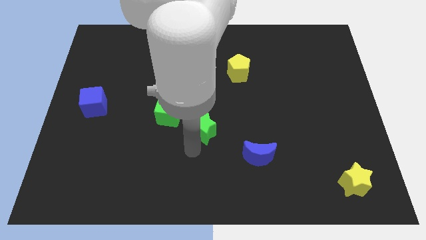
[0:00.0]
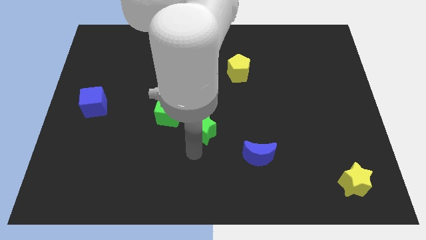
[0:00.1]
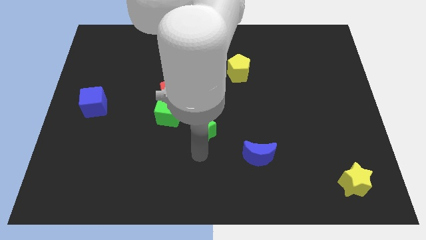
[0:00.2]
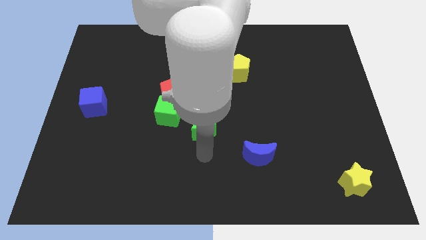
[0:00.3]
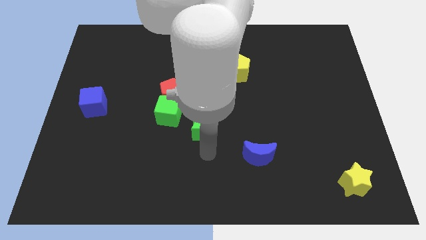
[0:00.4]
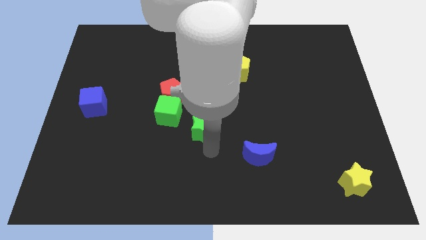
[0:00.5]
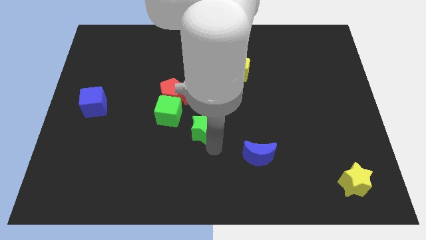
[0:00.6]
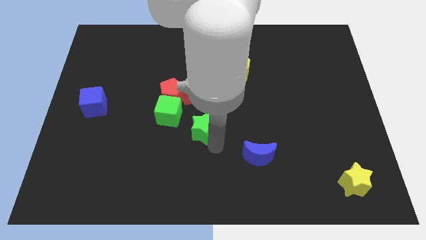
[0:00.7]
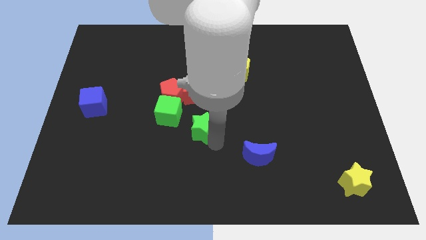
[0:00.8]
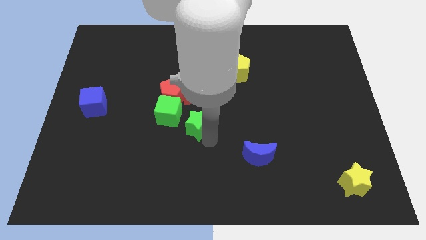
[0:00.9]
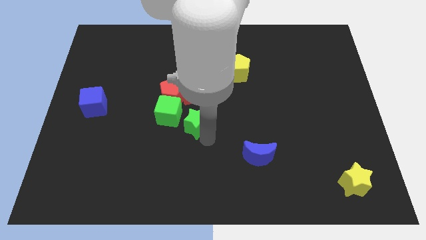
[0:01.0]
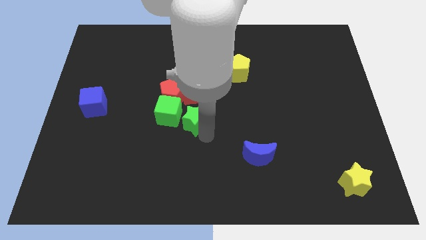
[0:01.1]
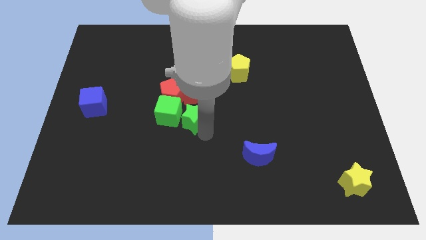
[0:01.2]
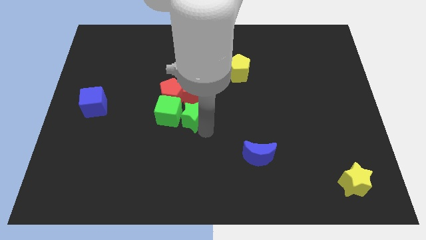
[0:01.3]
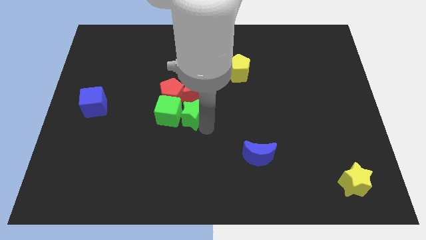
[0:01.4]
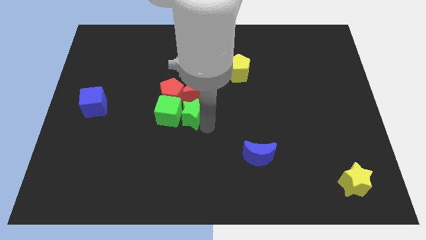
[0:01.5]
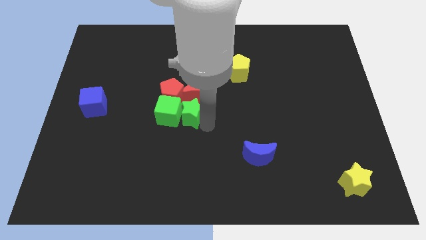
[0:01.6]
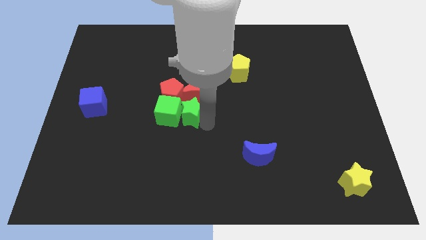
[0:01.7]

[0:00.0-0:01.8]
place the green star into green cube

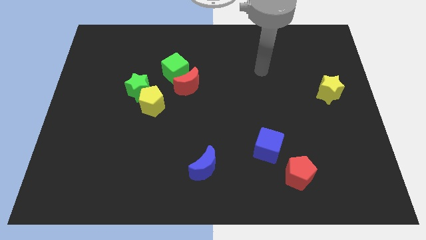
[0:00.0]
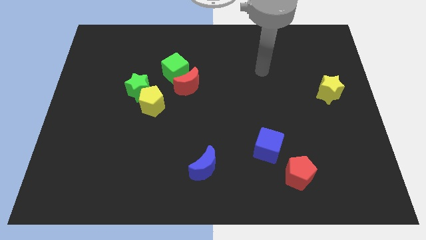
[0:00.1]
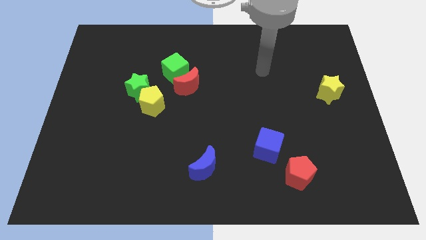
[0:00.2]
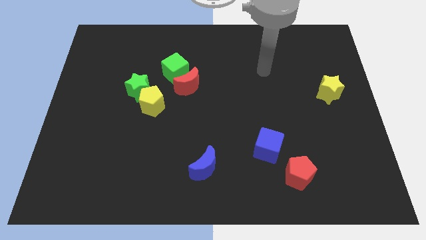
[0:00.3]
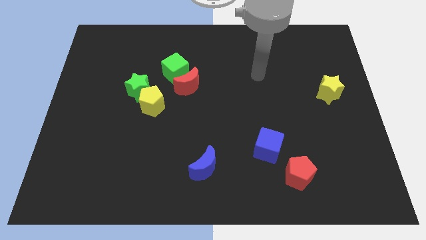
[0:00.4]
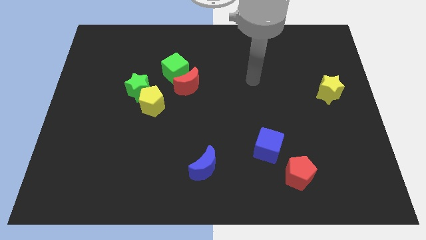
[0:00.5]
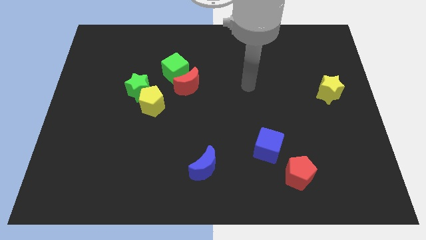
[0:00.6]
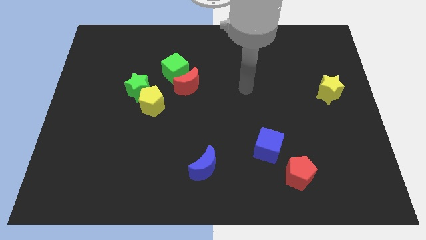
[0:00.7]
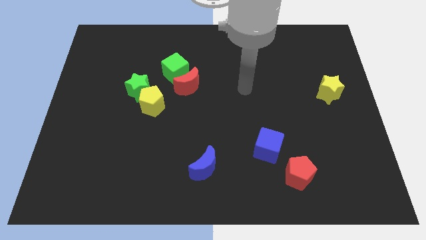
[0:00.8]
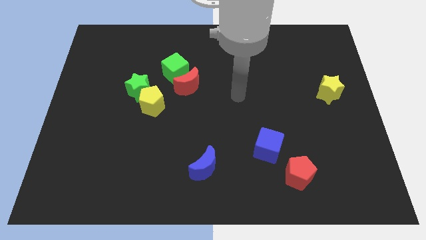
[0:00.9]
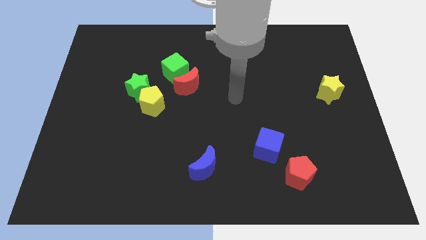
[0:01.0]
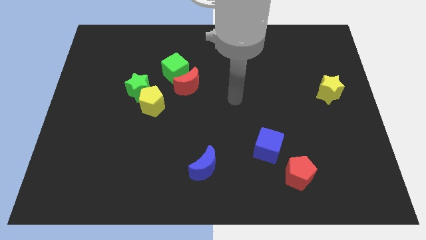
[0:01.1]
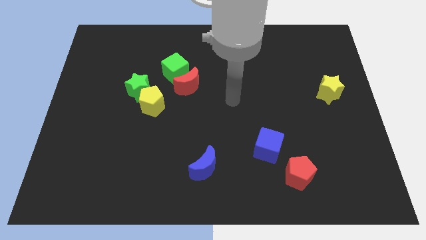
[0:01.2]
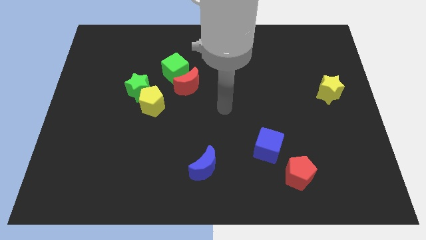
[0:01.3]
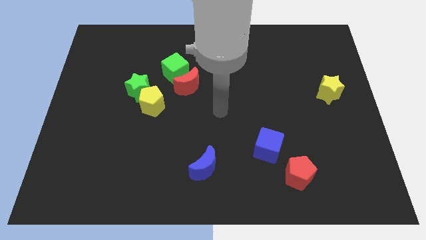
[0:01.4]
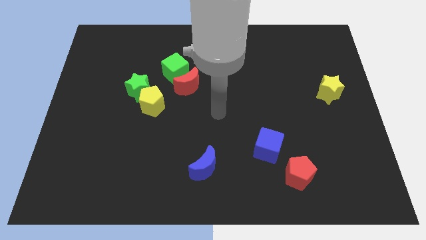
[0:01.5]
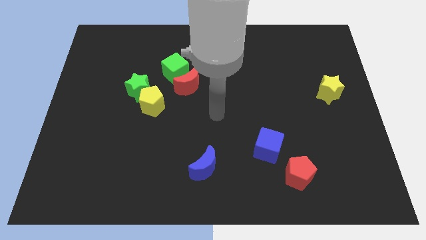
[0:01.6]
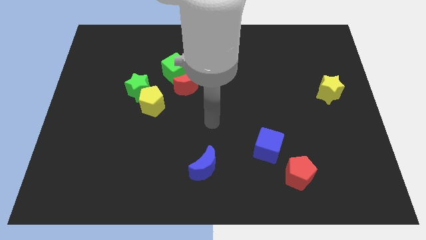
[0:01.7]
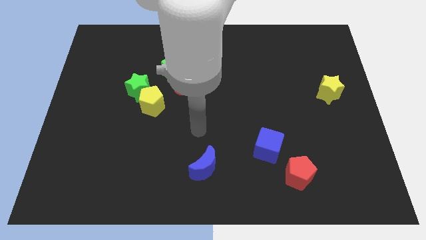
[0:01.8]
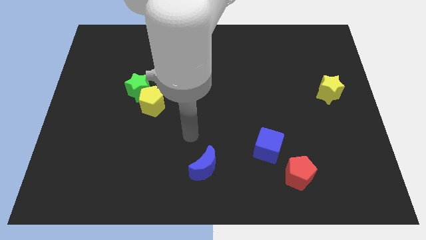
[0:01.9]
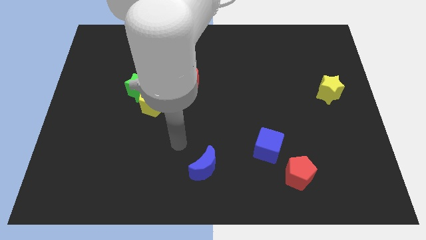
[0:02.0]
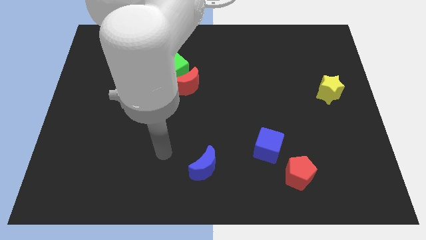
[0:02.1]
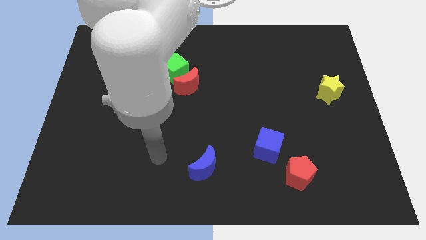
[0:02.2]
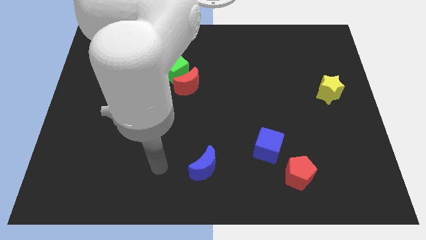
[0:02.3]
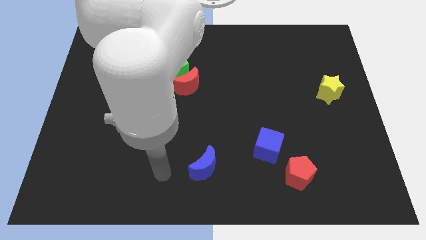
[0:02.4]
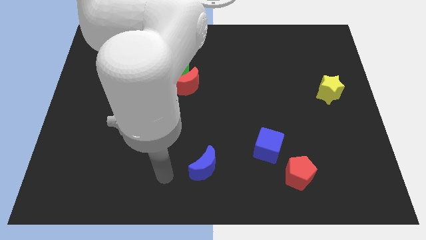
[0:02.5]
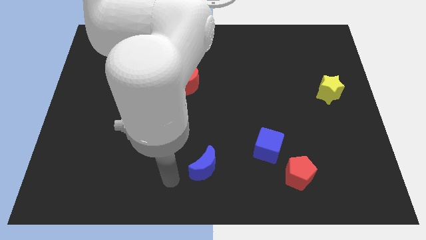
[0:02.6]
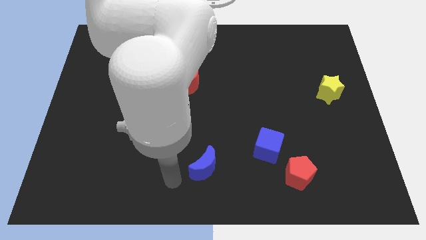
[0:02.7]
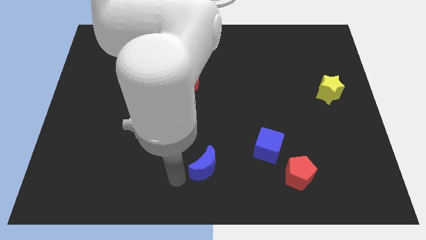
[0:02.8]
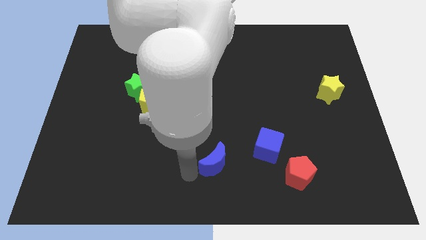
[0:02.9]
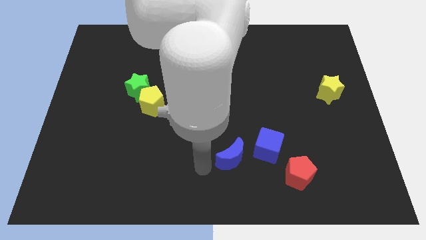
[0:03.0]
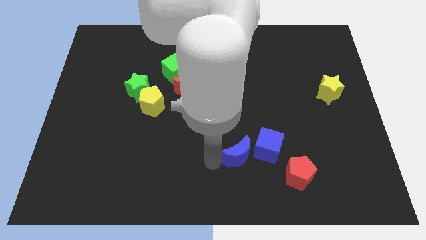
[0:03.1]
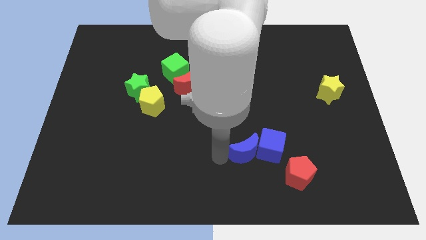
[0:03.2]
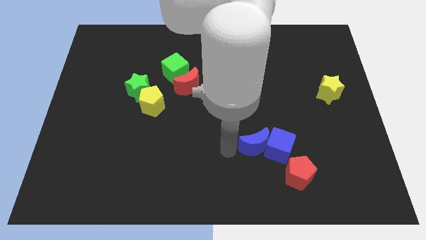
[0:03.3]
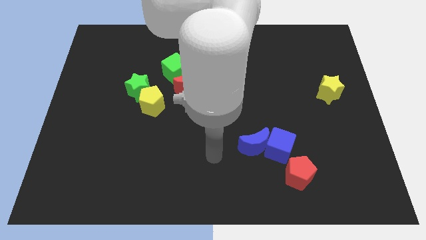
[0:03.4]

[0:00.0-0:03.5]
move the blue moon left of the blue cube

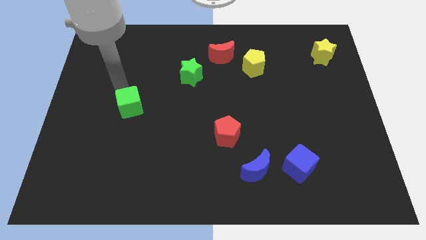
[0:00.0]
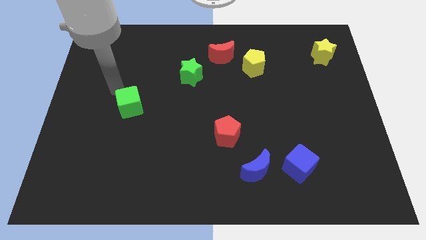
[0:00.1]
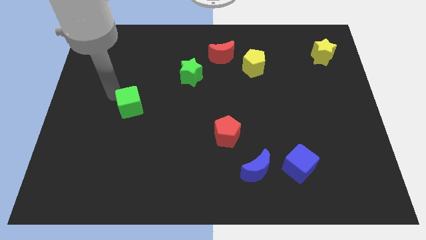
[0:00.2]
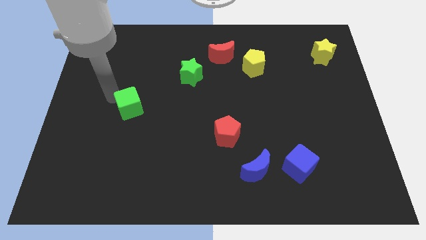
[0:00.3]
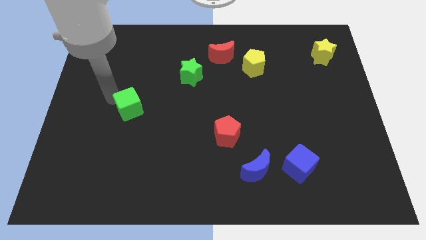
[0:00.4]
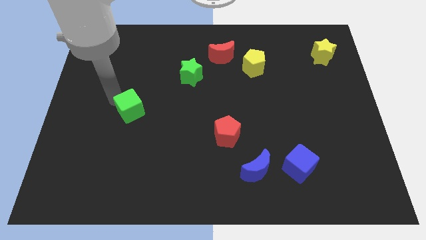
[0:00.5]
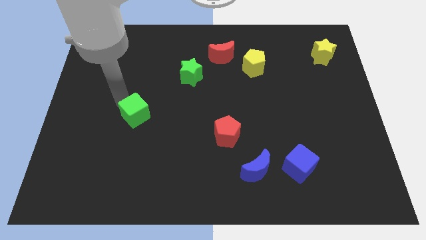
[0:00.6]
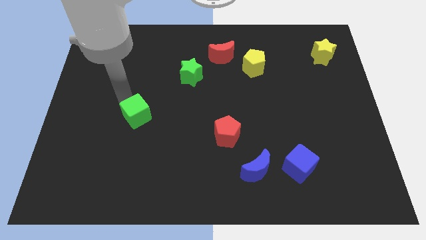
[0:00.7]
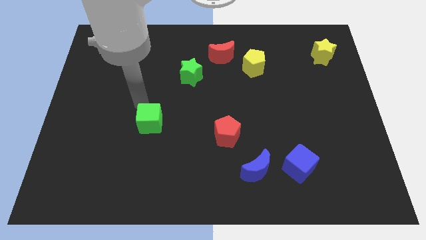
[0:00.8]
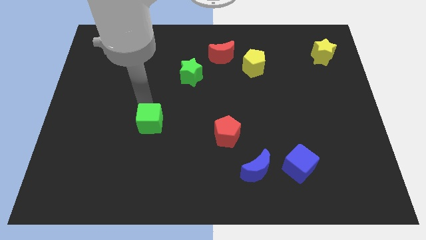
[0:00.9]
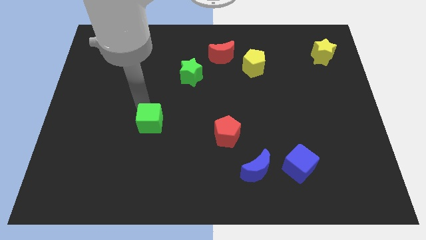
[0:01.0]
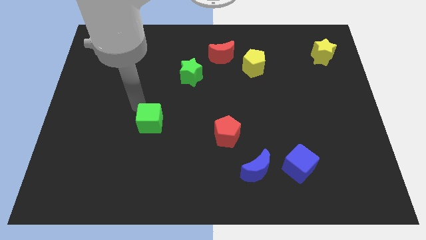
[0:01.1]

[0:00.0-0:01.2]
drag the green cube slightly to the bottom right side of the board

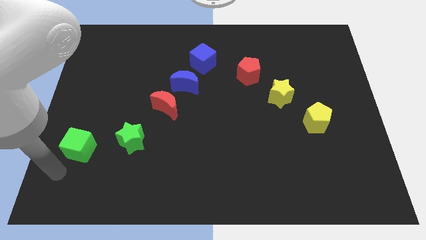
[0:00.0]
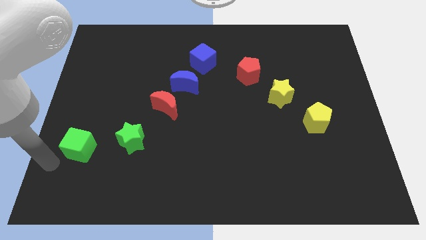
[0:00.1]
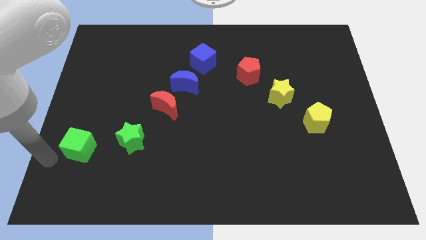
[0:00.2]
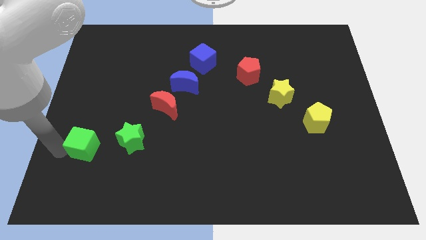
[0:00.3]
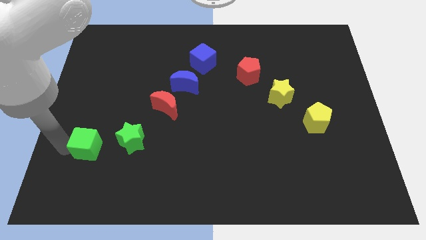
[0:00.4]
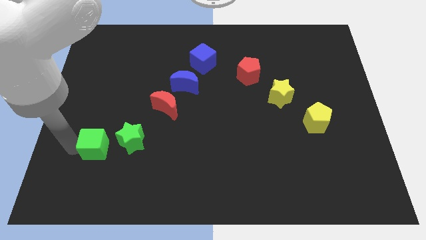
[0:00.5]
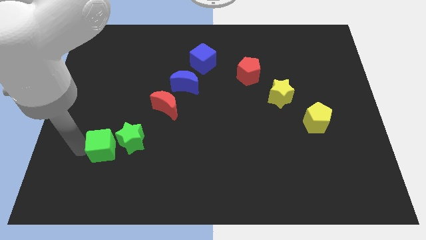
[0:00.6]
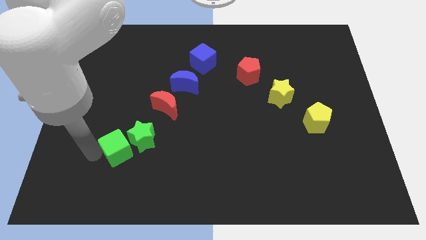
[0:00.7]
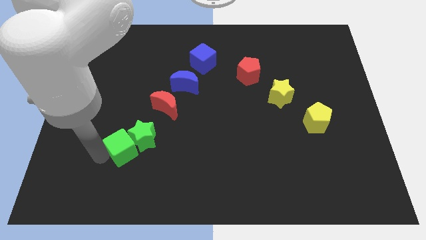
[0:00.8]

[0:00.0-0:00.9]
push green cube into green start

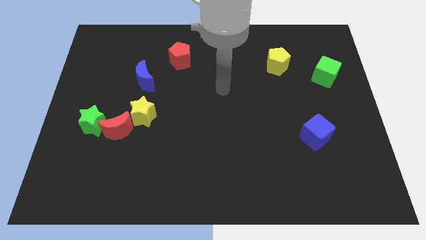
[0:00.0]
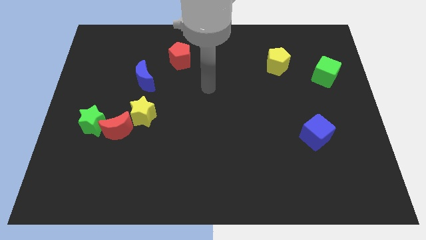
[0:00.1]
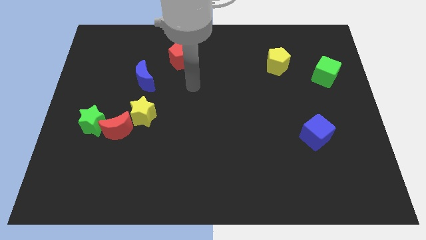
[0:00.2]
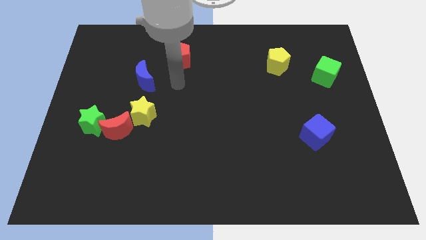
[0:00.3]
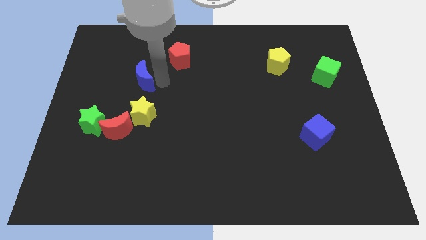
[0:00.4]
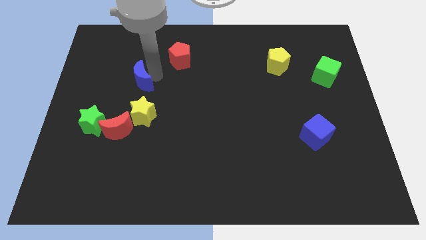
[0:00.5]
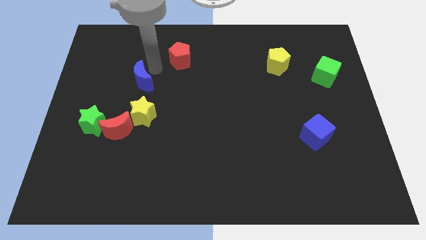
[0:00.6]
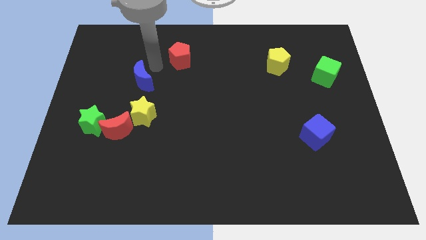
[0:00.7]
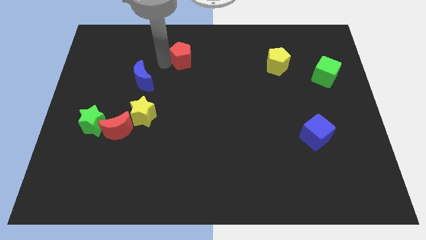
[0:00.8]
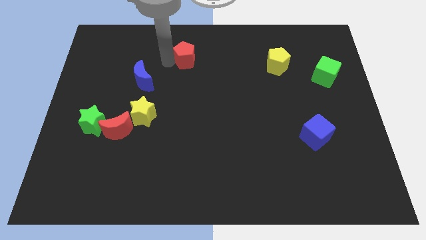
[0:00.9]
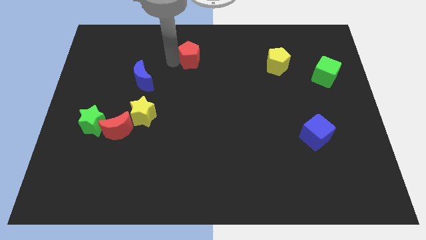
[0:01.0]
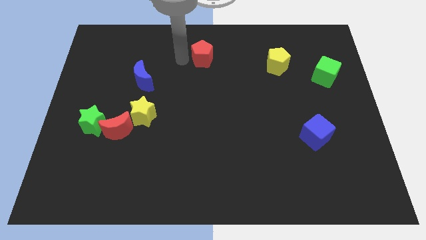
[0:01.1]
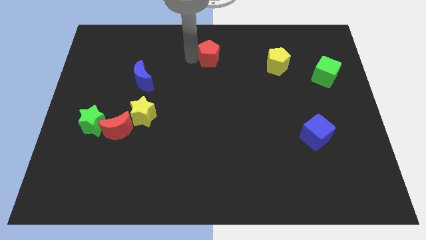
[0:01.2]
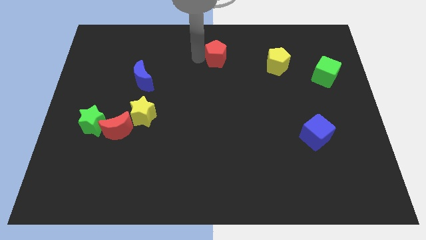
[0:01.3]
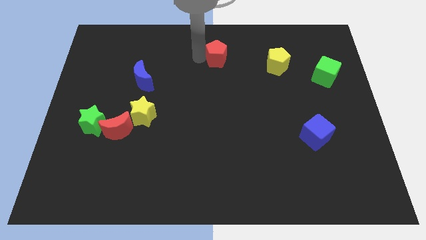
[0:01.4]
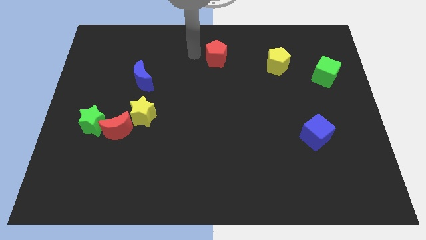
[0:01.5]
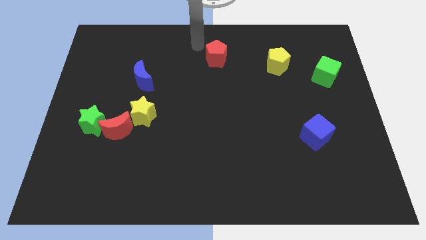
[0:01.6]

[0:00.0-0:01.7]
push the red pentagon slightly to the right side of the board
